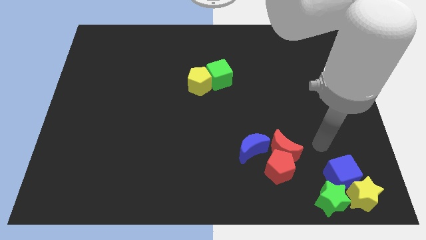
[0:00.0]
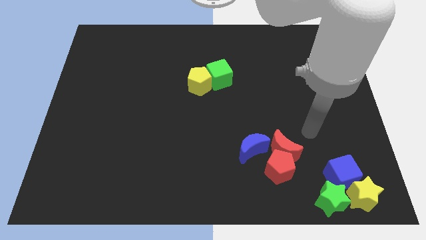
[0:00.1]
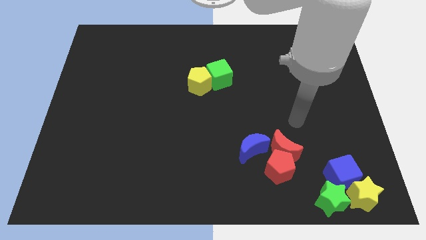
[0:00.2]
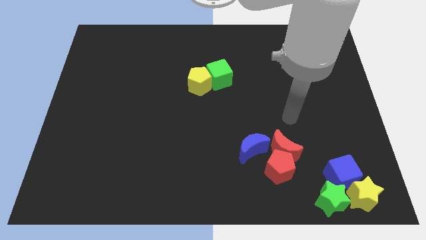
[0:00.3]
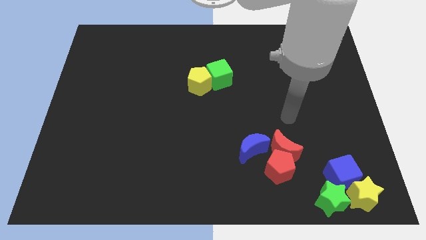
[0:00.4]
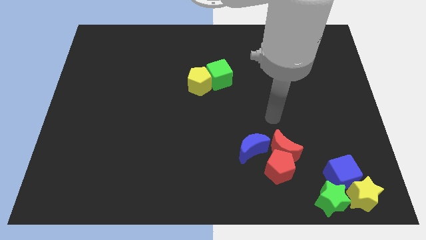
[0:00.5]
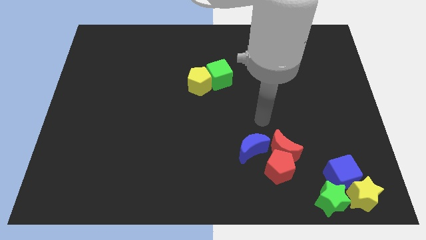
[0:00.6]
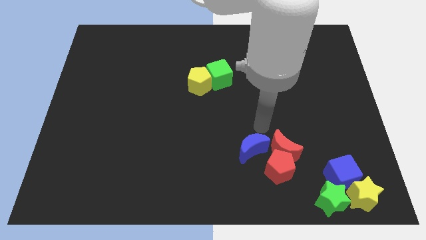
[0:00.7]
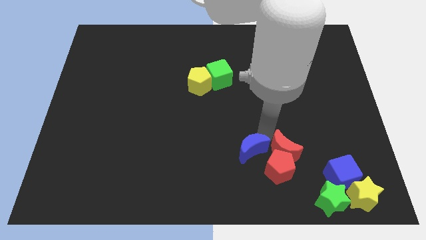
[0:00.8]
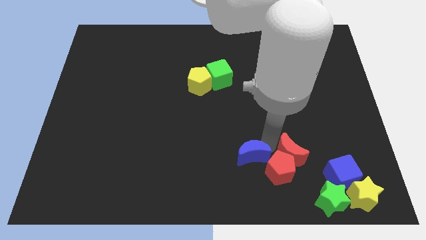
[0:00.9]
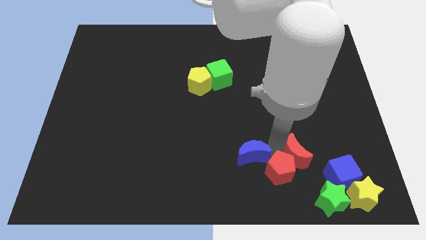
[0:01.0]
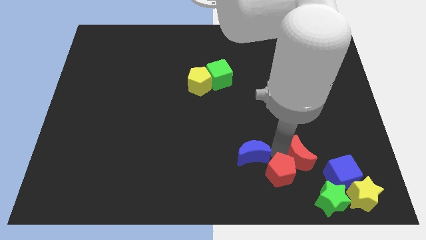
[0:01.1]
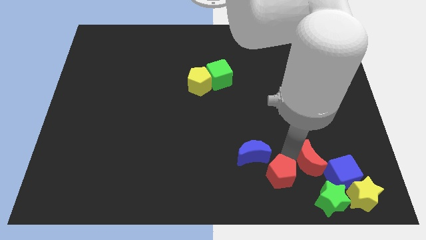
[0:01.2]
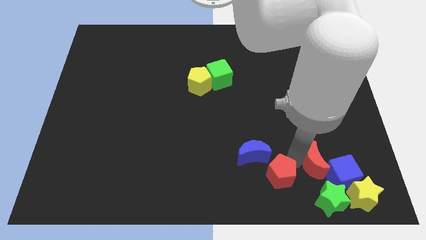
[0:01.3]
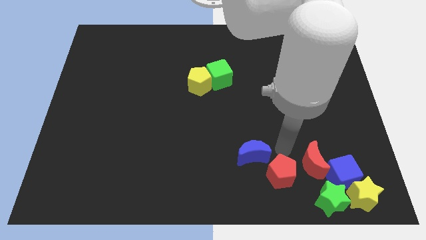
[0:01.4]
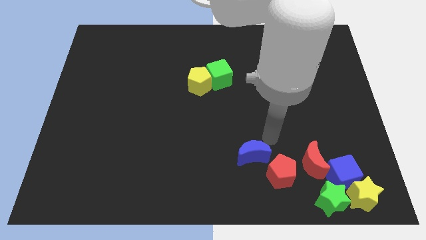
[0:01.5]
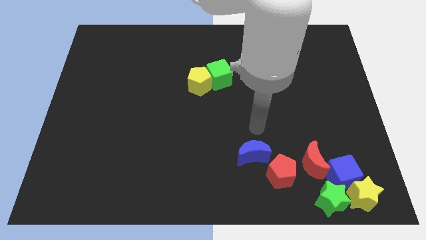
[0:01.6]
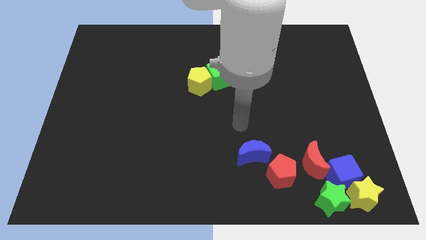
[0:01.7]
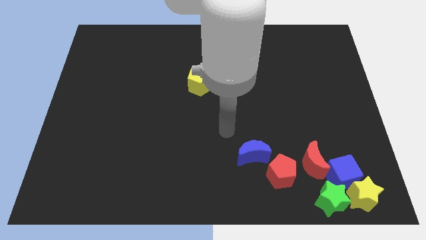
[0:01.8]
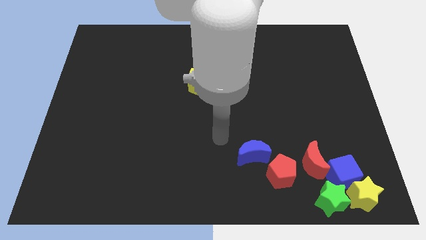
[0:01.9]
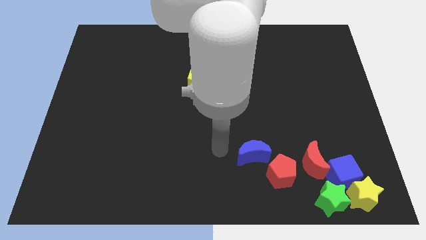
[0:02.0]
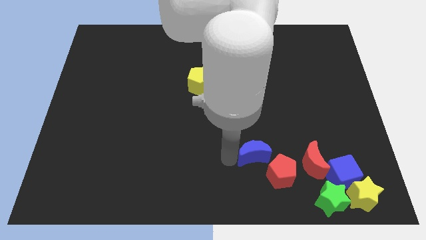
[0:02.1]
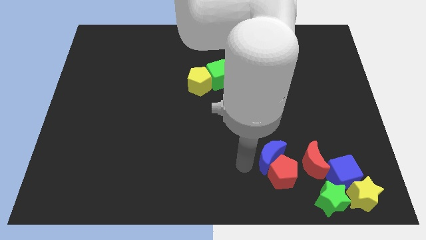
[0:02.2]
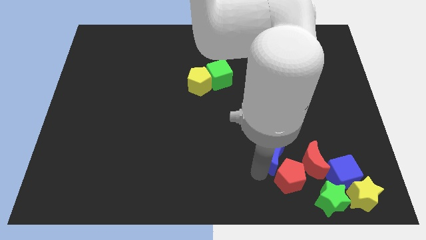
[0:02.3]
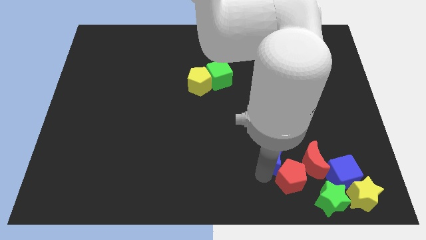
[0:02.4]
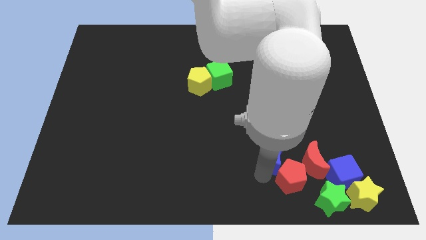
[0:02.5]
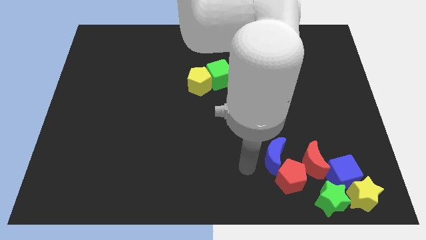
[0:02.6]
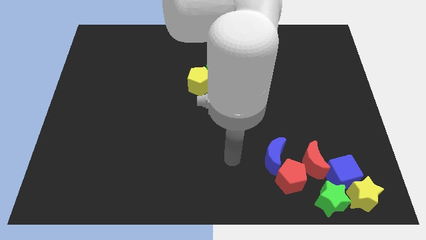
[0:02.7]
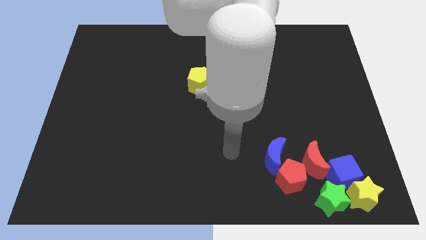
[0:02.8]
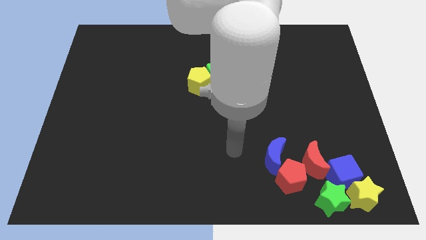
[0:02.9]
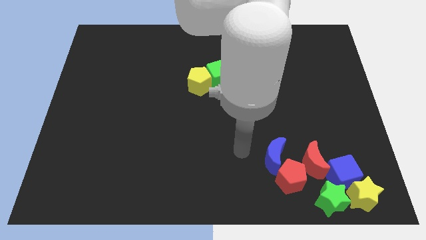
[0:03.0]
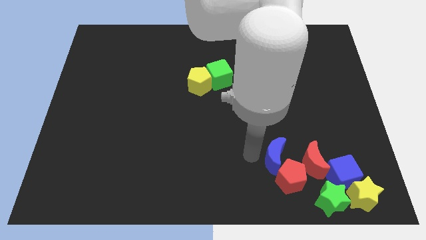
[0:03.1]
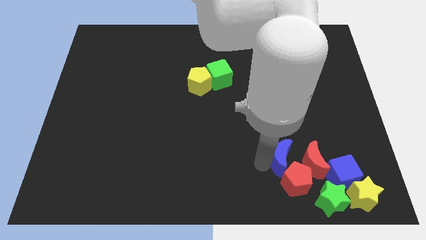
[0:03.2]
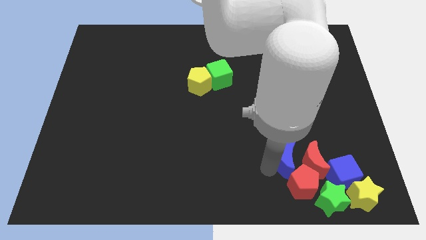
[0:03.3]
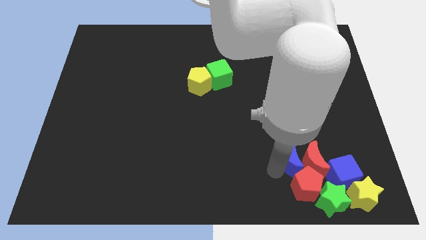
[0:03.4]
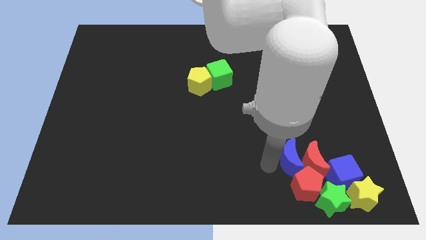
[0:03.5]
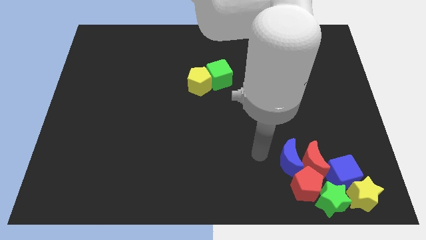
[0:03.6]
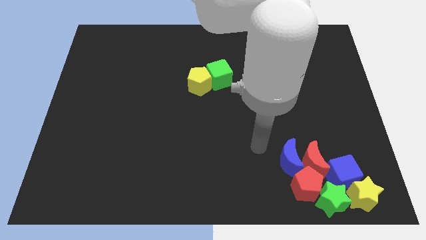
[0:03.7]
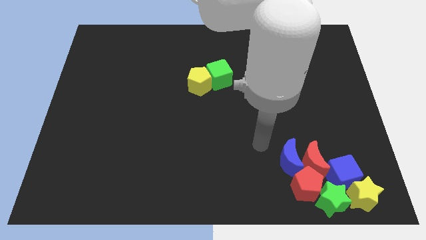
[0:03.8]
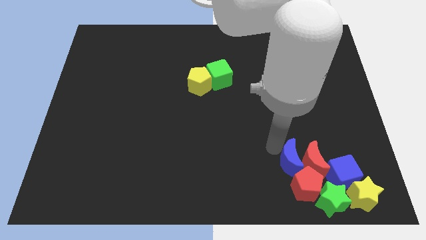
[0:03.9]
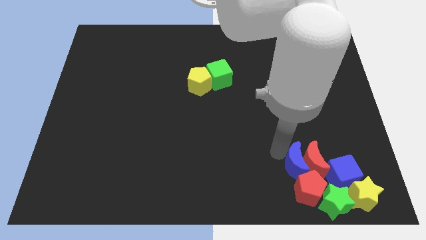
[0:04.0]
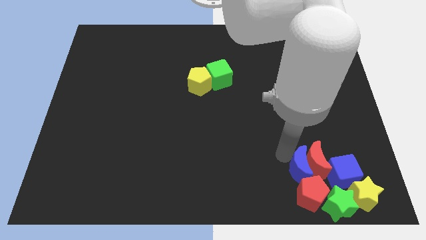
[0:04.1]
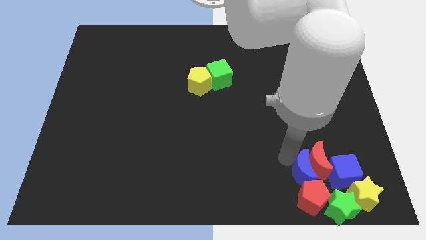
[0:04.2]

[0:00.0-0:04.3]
move the red crescent blue crescent and red pentagon to the bottom left side of the board

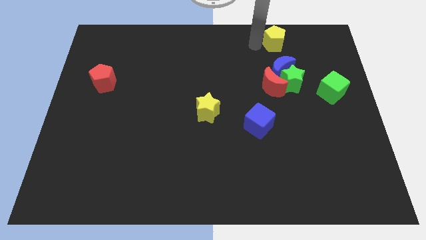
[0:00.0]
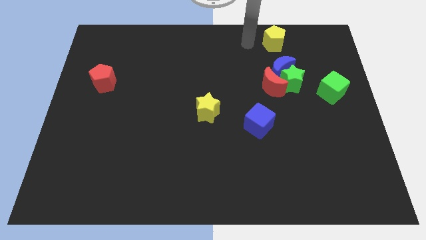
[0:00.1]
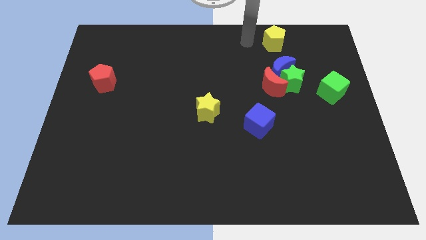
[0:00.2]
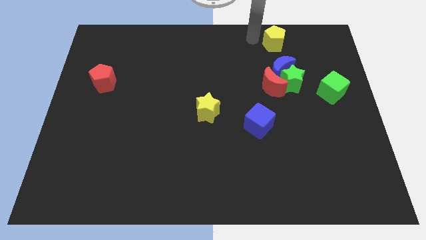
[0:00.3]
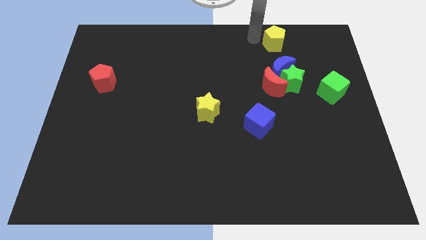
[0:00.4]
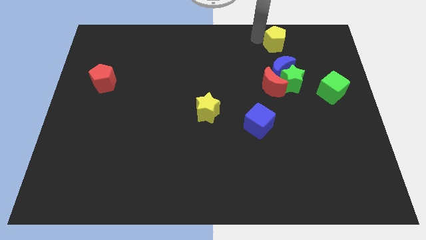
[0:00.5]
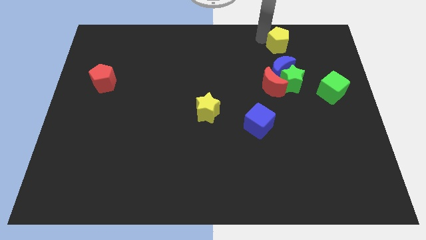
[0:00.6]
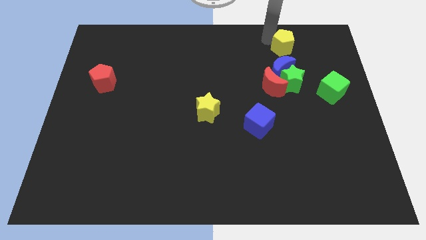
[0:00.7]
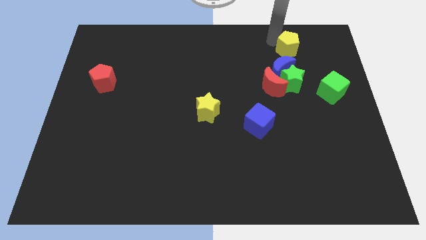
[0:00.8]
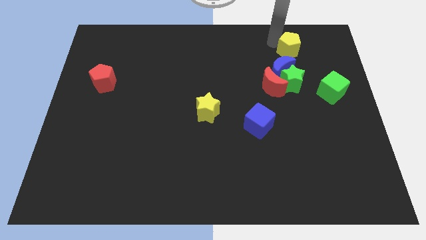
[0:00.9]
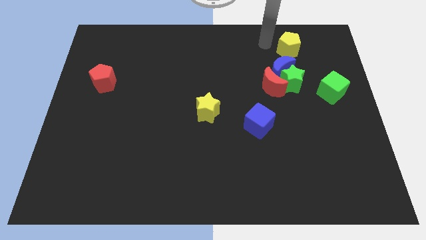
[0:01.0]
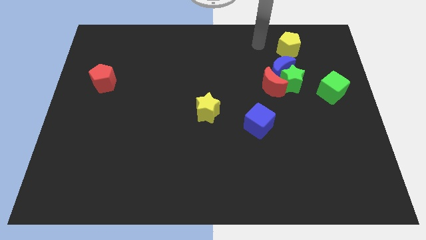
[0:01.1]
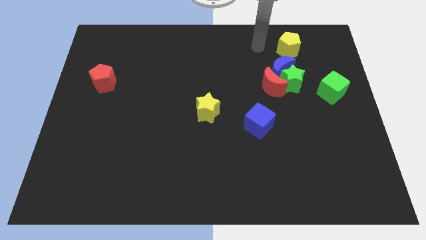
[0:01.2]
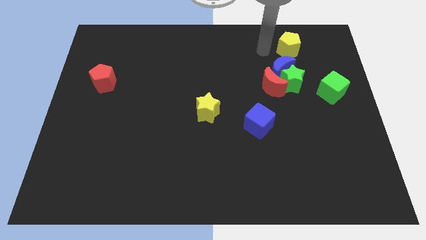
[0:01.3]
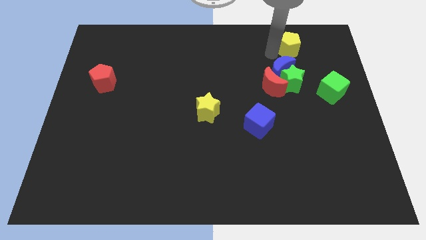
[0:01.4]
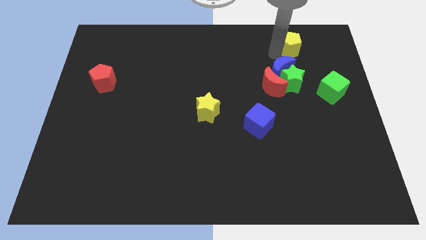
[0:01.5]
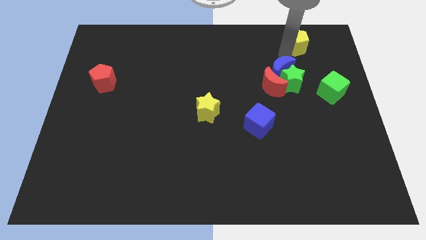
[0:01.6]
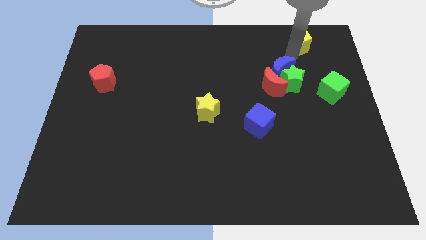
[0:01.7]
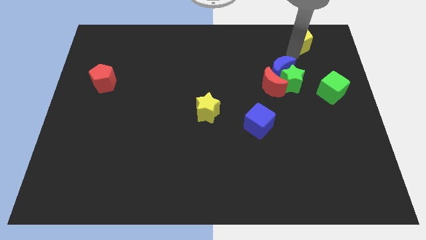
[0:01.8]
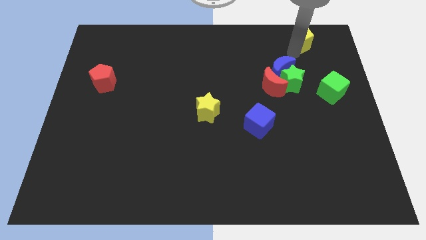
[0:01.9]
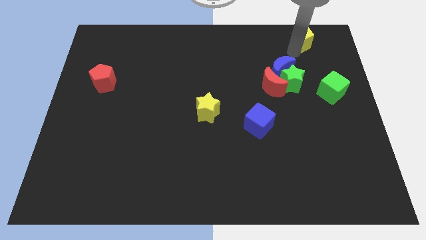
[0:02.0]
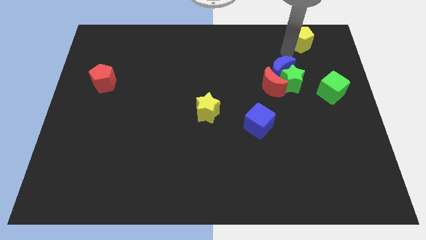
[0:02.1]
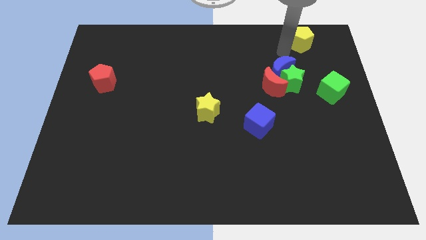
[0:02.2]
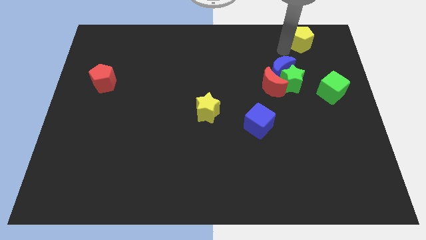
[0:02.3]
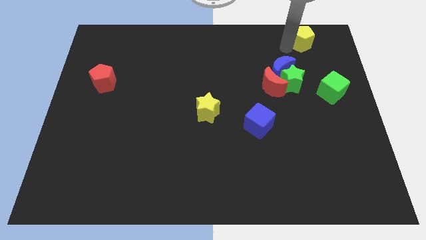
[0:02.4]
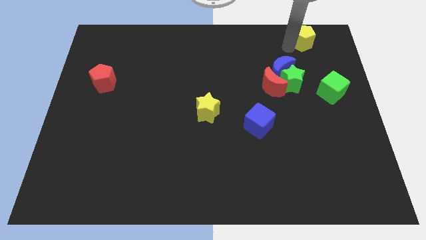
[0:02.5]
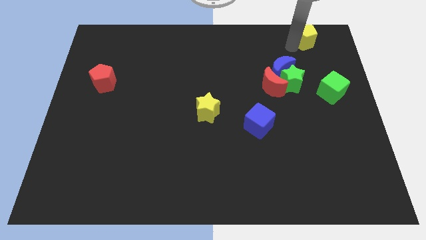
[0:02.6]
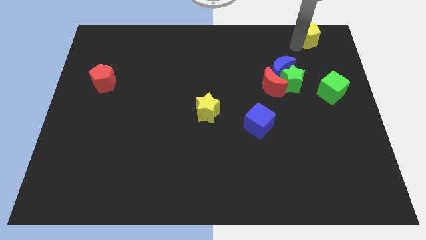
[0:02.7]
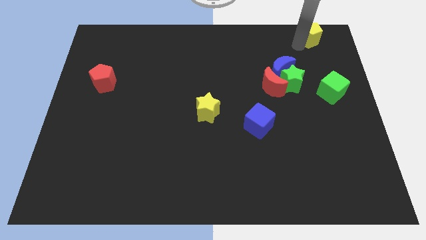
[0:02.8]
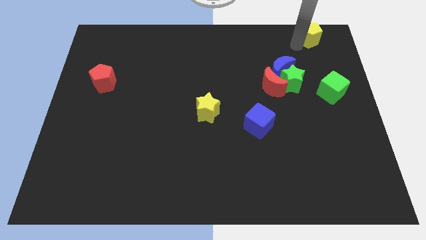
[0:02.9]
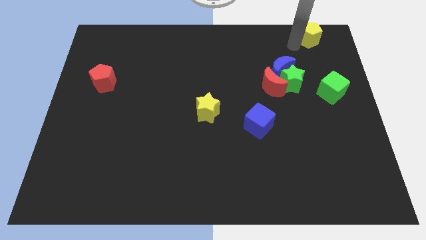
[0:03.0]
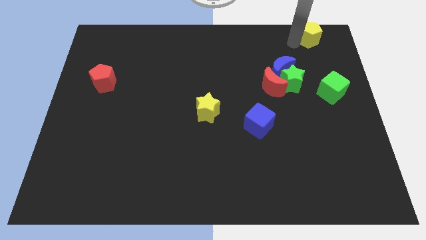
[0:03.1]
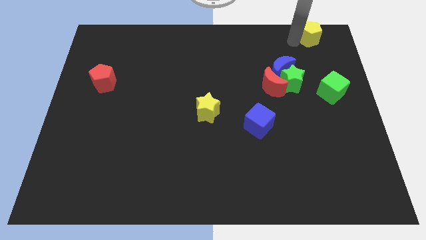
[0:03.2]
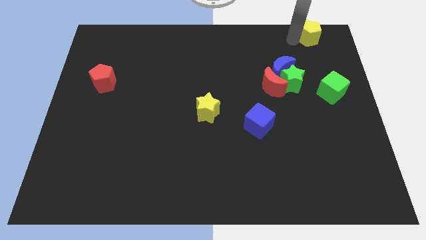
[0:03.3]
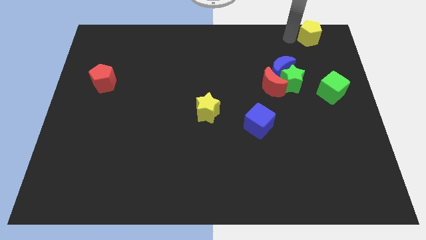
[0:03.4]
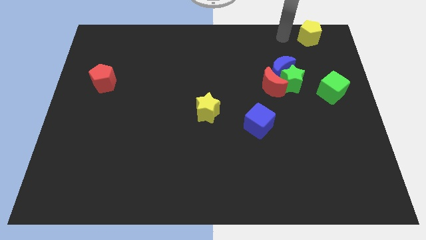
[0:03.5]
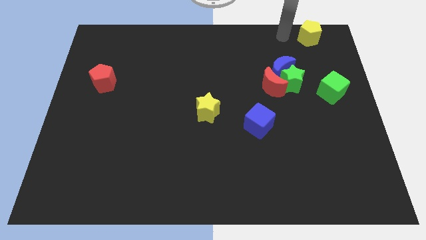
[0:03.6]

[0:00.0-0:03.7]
move the yellow pentagon vertically to the top of the green cube

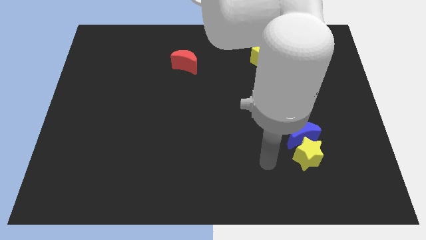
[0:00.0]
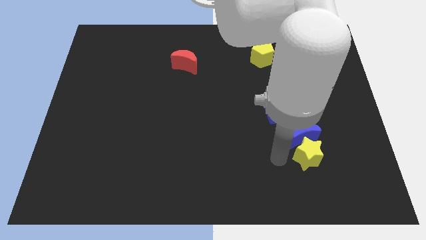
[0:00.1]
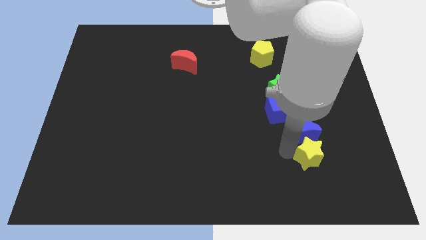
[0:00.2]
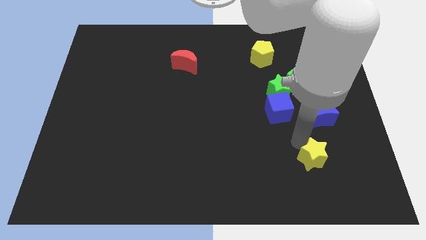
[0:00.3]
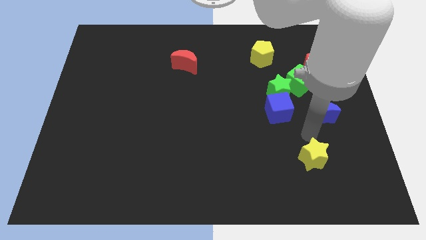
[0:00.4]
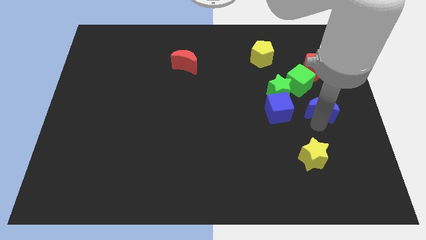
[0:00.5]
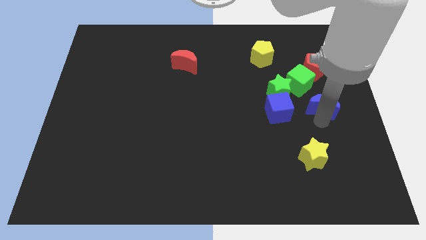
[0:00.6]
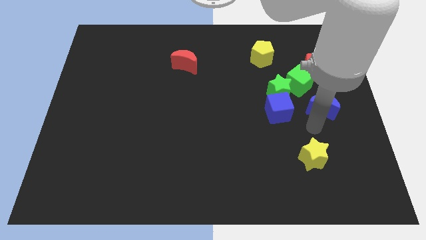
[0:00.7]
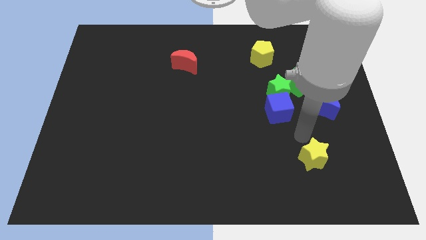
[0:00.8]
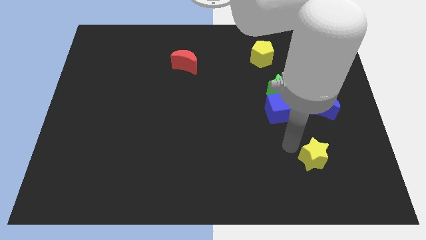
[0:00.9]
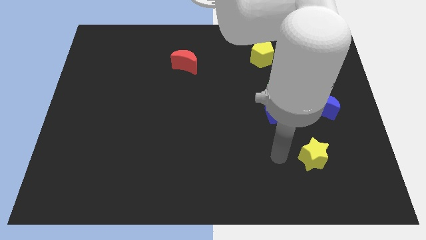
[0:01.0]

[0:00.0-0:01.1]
place the blue moon parallel to the blue cube
